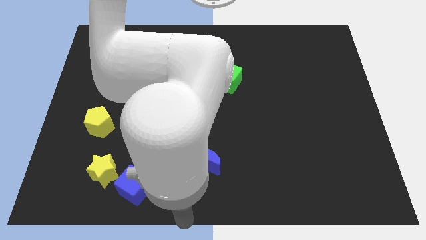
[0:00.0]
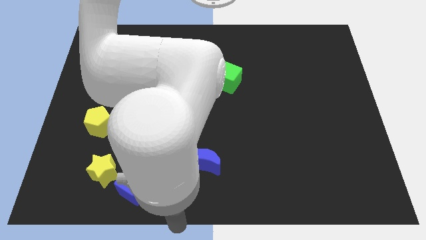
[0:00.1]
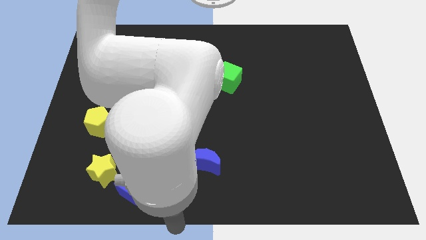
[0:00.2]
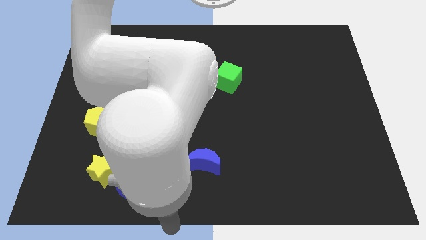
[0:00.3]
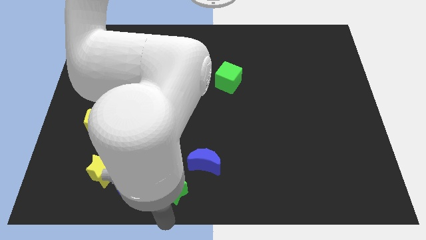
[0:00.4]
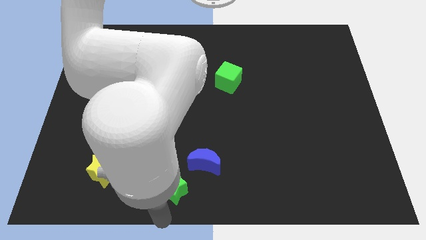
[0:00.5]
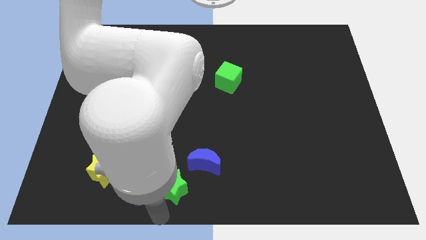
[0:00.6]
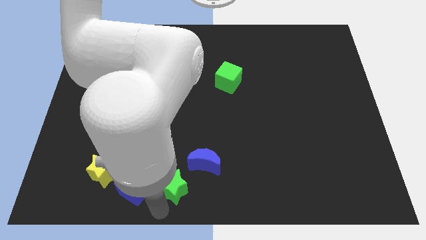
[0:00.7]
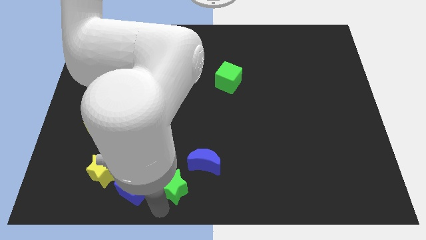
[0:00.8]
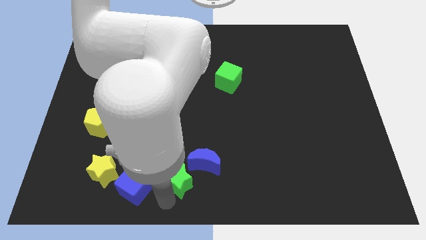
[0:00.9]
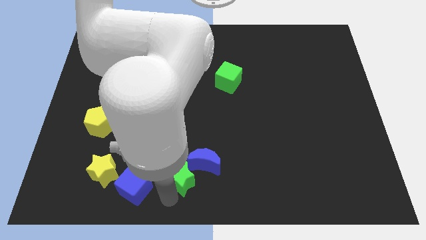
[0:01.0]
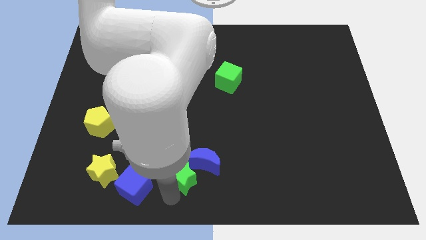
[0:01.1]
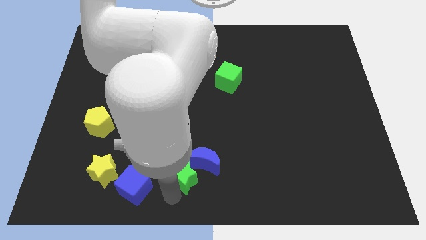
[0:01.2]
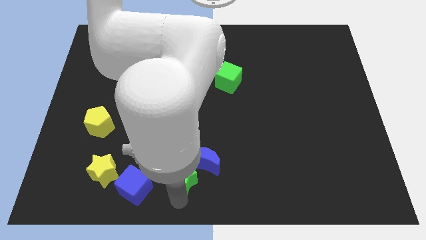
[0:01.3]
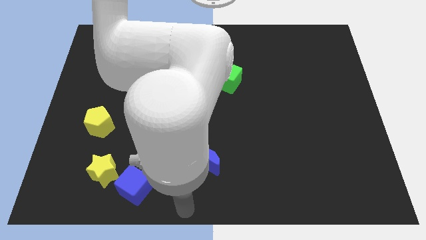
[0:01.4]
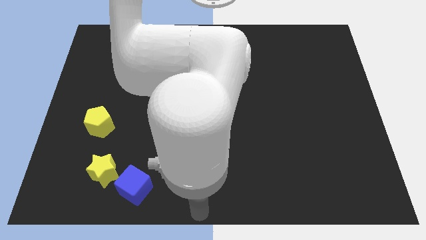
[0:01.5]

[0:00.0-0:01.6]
slightly push the green star into blue crescent

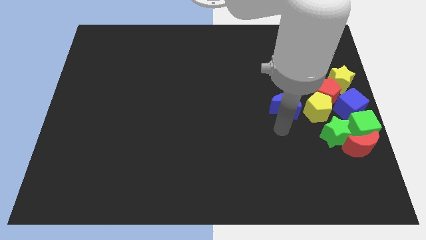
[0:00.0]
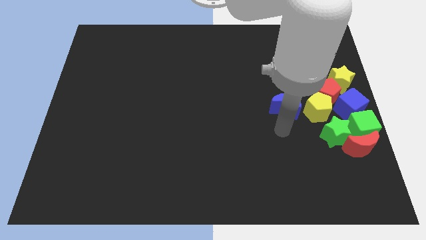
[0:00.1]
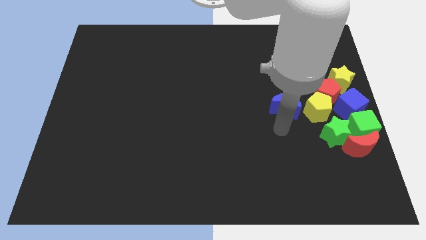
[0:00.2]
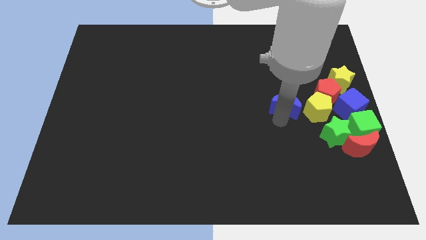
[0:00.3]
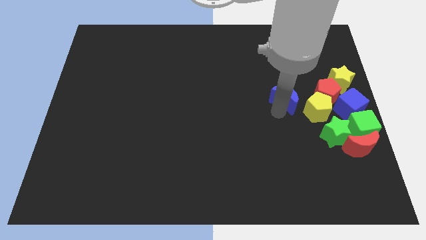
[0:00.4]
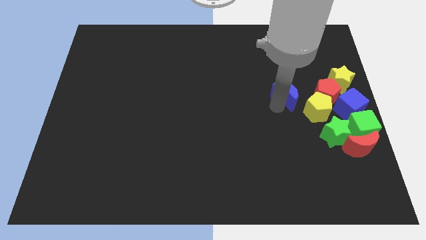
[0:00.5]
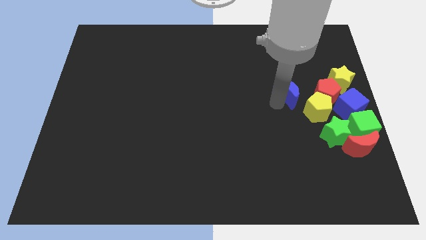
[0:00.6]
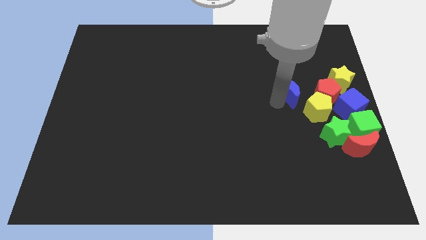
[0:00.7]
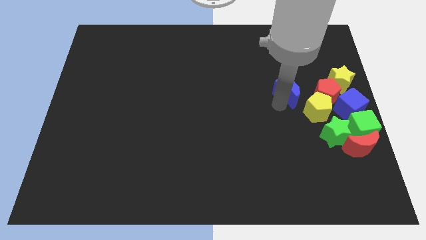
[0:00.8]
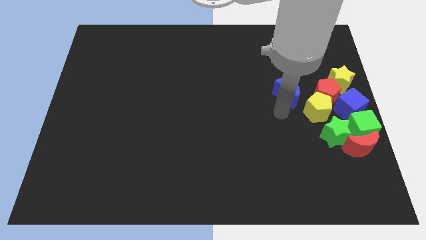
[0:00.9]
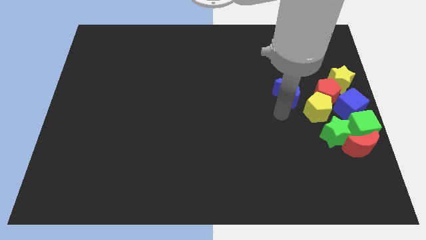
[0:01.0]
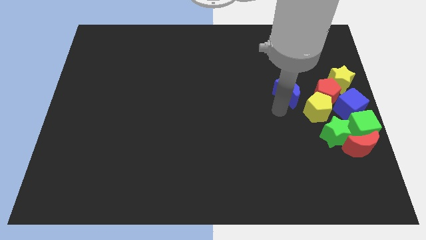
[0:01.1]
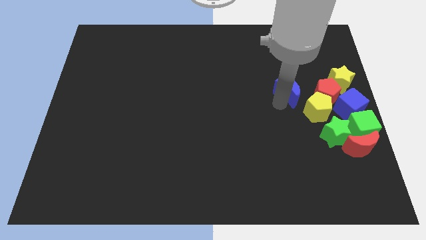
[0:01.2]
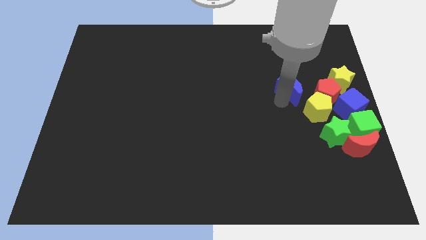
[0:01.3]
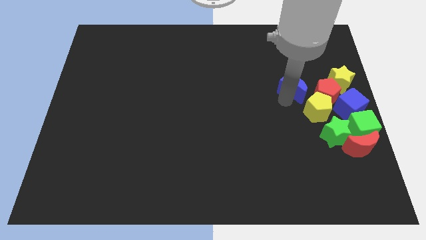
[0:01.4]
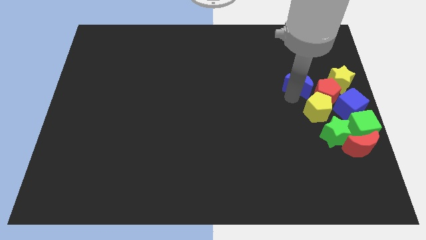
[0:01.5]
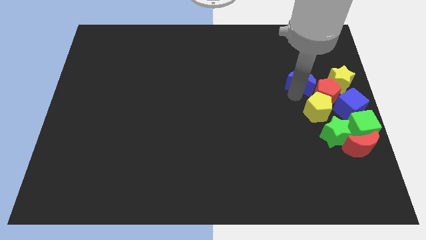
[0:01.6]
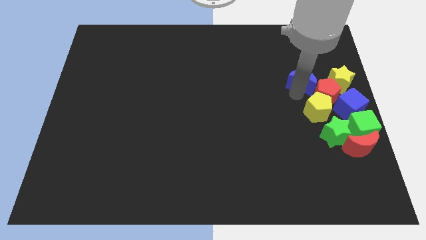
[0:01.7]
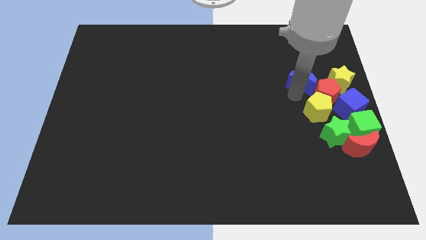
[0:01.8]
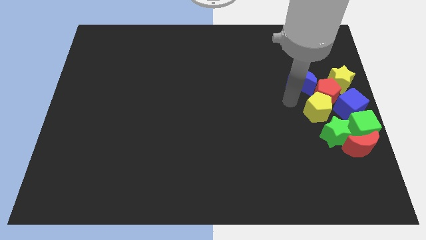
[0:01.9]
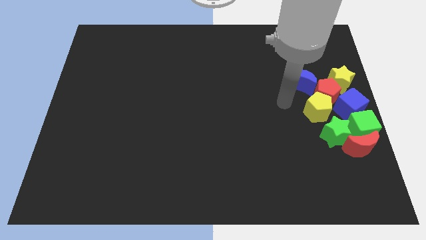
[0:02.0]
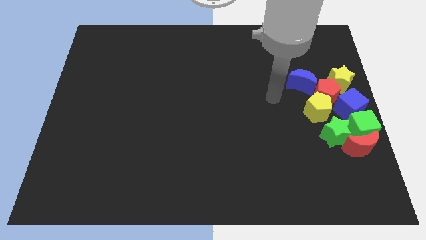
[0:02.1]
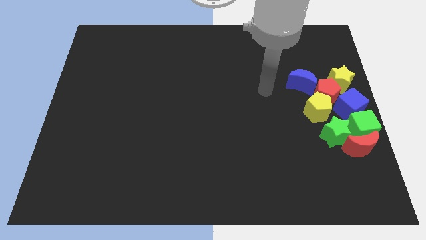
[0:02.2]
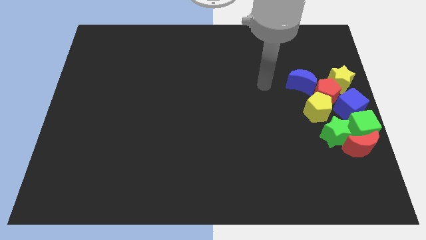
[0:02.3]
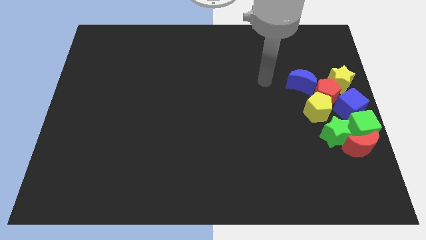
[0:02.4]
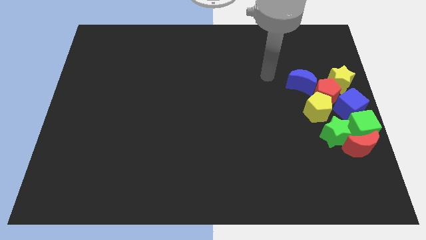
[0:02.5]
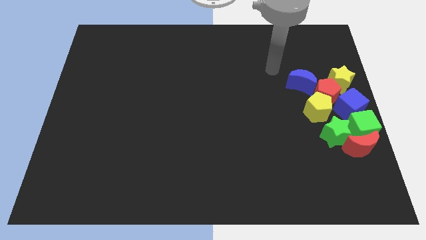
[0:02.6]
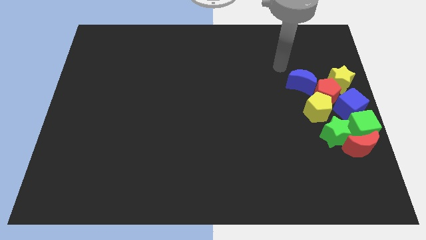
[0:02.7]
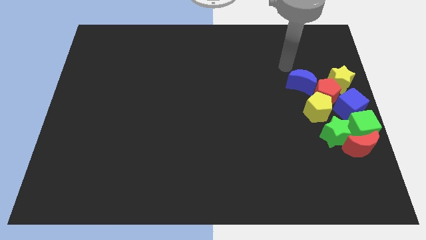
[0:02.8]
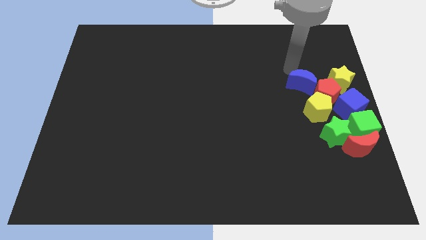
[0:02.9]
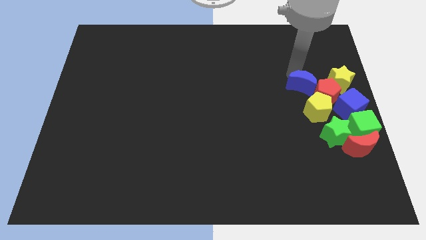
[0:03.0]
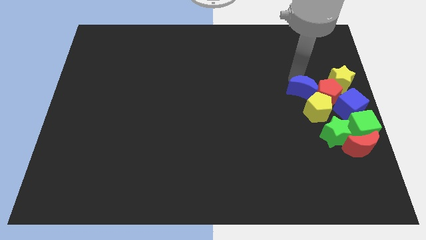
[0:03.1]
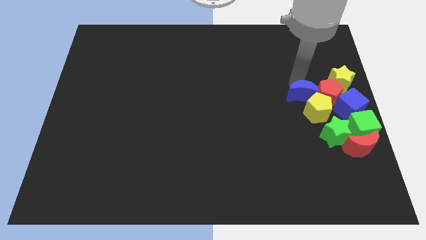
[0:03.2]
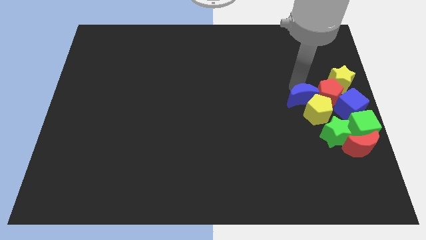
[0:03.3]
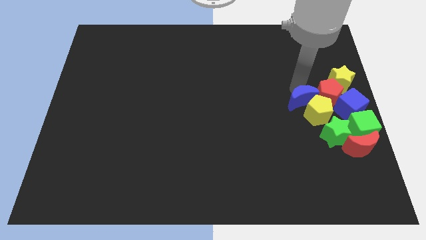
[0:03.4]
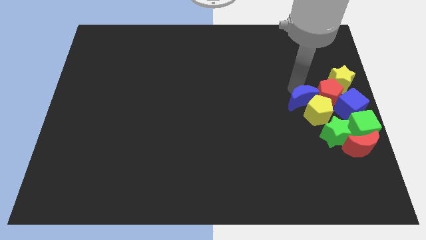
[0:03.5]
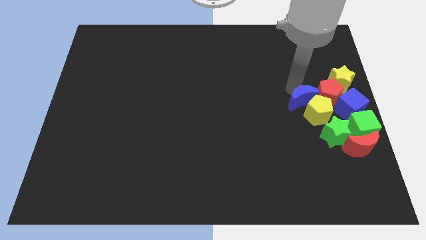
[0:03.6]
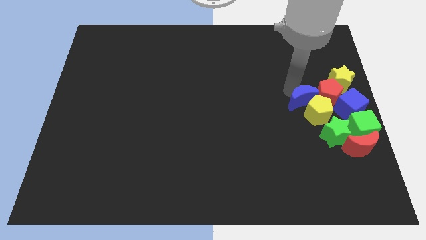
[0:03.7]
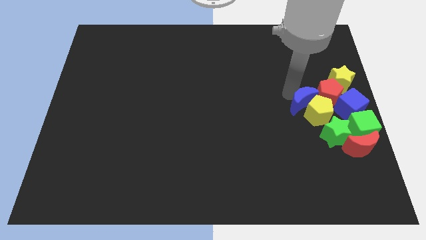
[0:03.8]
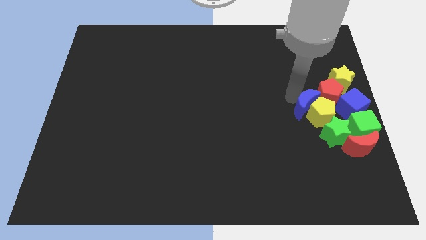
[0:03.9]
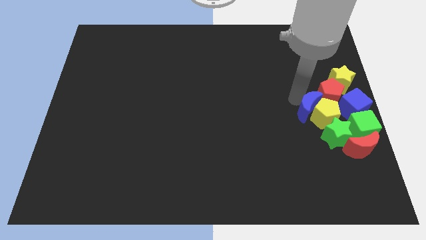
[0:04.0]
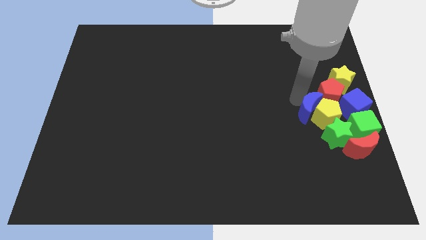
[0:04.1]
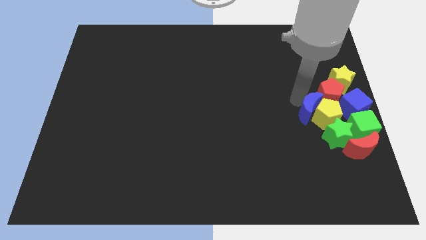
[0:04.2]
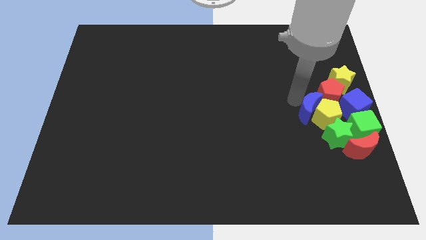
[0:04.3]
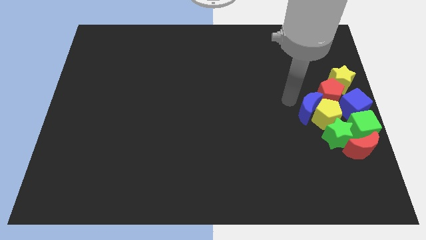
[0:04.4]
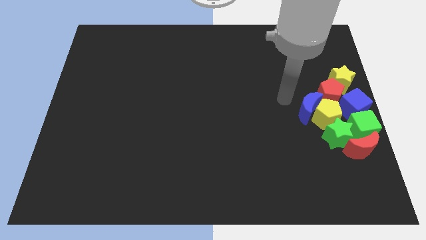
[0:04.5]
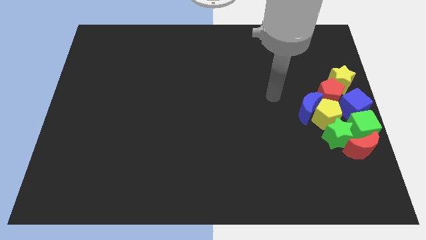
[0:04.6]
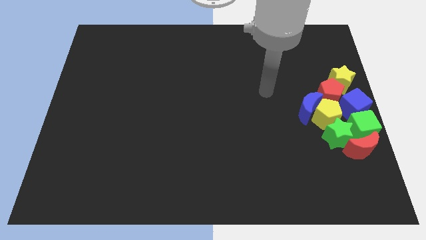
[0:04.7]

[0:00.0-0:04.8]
push the blue moon into the yellow pentagon

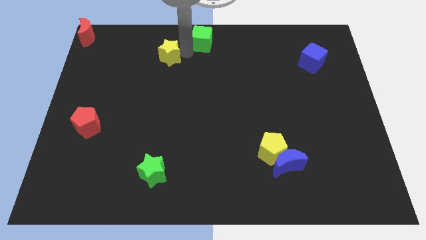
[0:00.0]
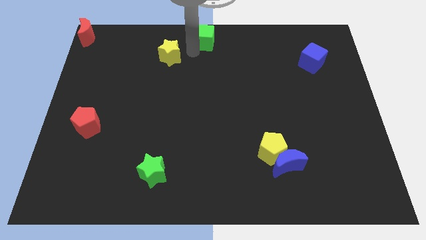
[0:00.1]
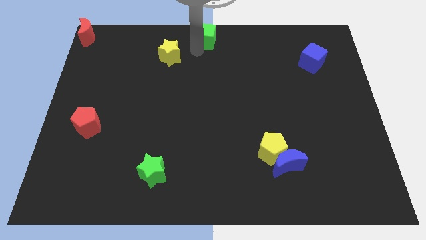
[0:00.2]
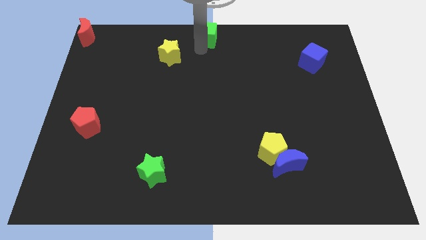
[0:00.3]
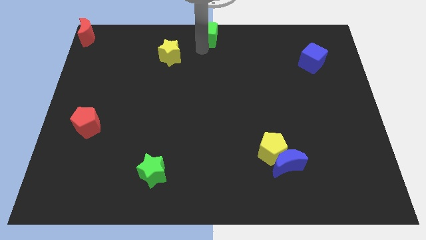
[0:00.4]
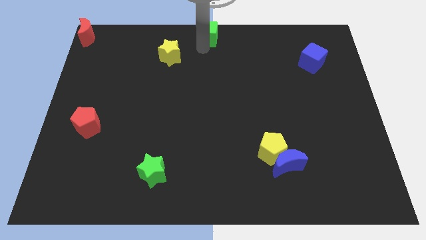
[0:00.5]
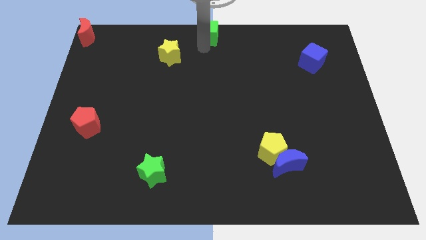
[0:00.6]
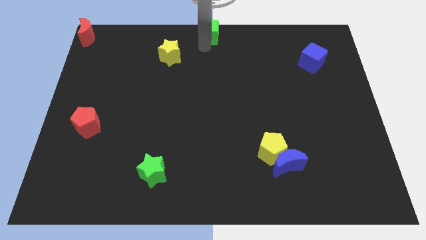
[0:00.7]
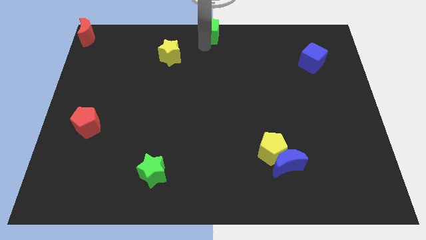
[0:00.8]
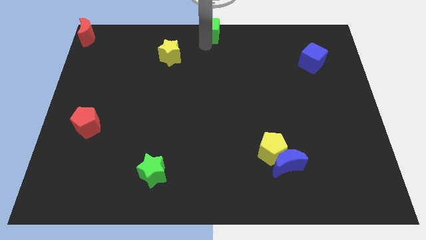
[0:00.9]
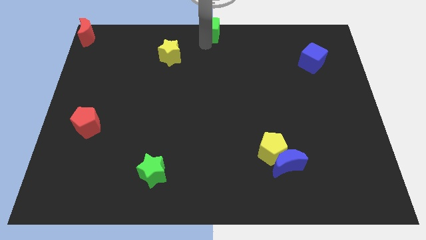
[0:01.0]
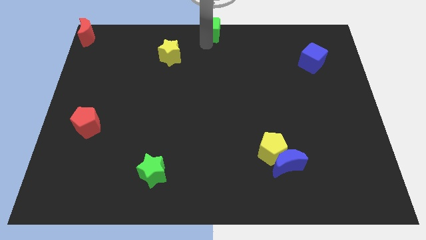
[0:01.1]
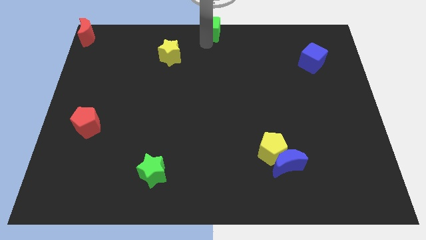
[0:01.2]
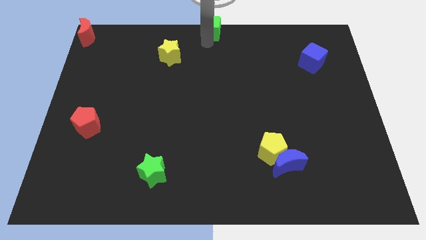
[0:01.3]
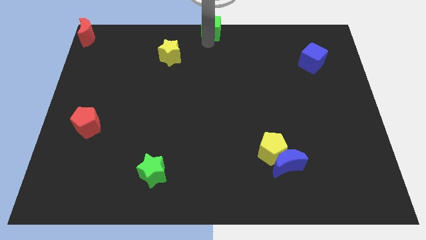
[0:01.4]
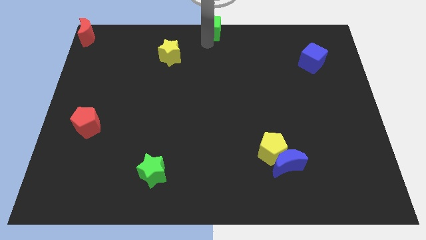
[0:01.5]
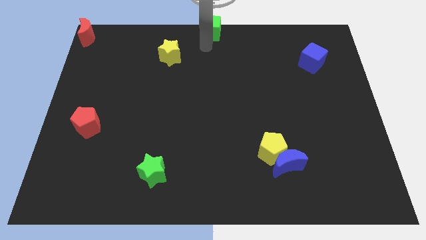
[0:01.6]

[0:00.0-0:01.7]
place green cube towards top middle

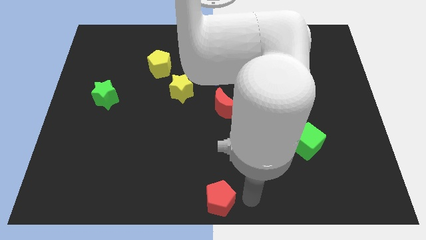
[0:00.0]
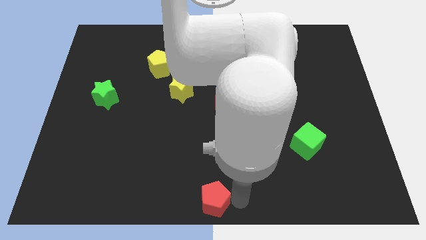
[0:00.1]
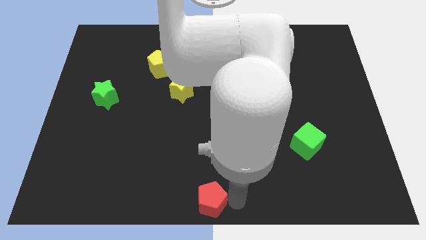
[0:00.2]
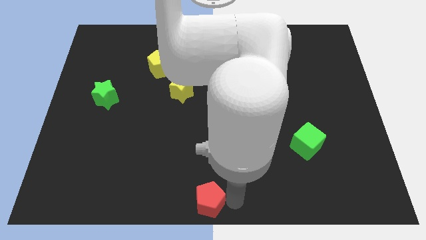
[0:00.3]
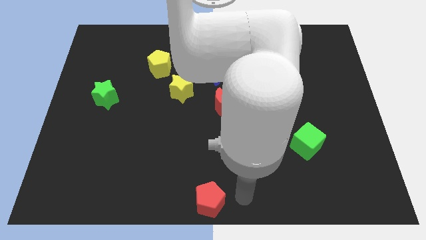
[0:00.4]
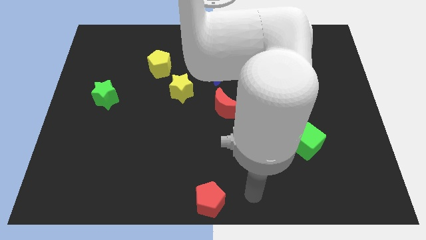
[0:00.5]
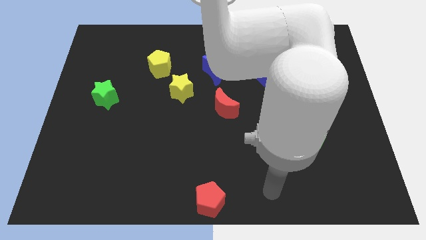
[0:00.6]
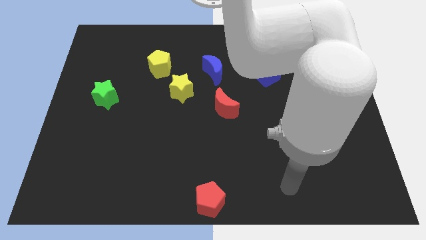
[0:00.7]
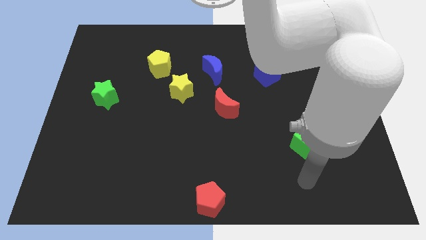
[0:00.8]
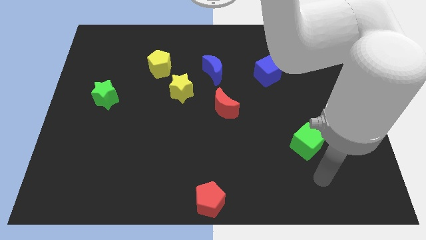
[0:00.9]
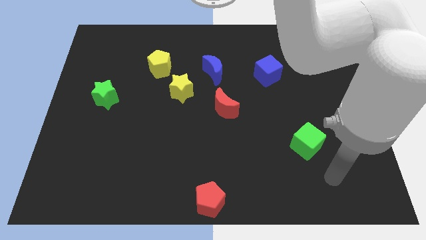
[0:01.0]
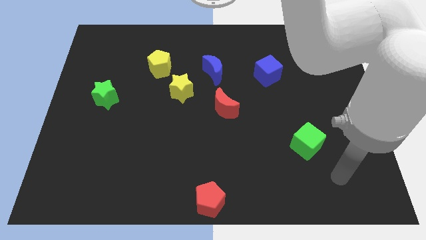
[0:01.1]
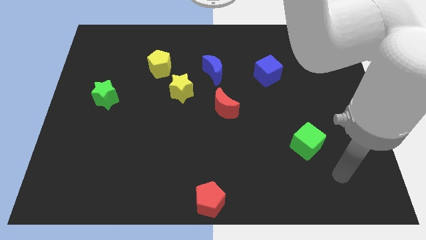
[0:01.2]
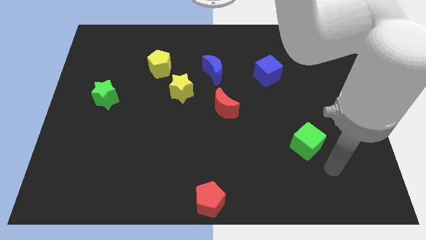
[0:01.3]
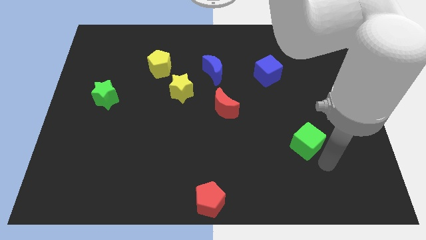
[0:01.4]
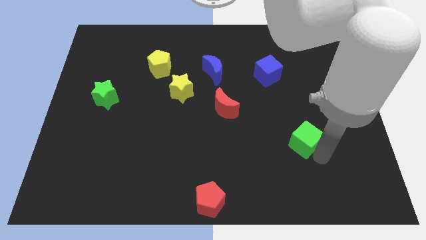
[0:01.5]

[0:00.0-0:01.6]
move the arm to the bottom of the green cube
